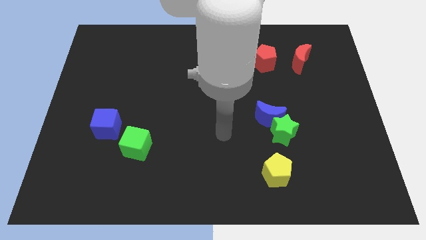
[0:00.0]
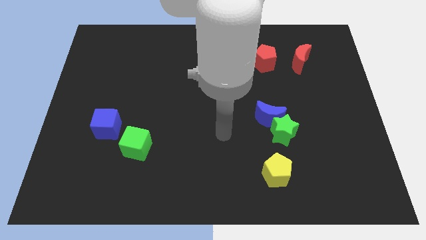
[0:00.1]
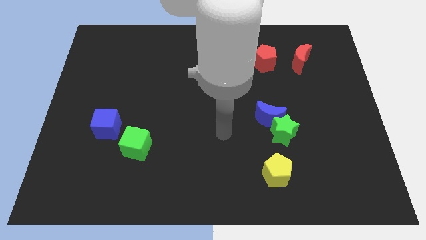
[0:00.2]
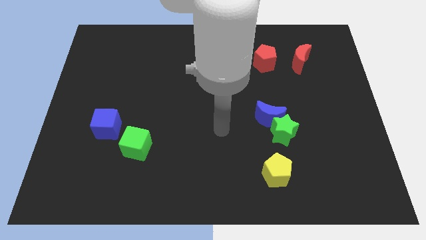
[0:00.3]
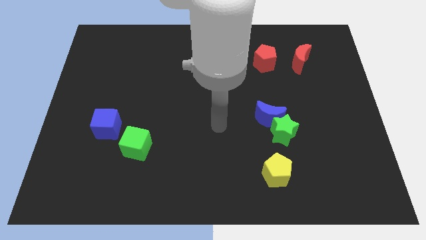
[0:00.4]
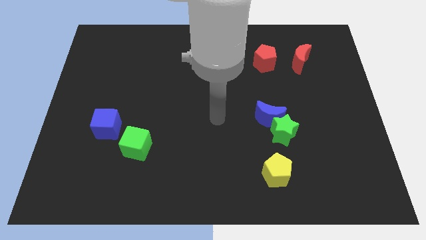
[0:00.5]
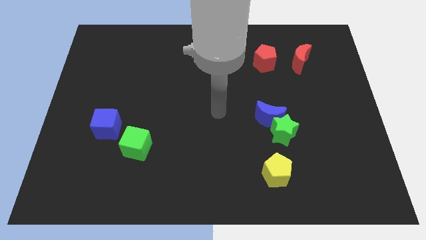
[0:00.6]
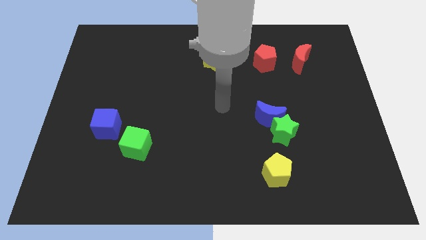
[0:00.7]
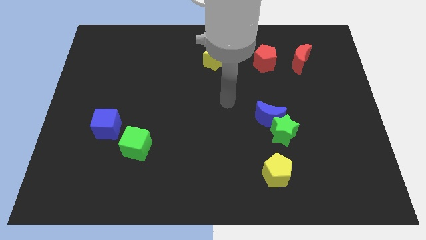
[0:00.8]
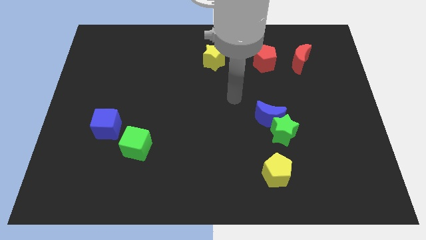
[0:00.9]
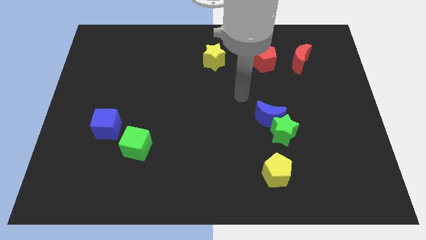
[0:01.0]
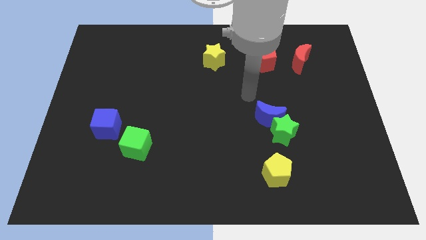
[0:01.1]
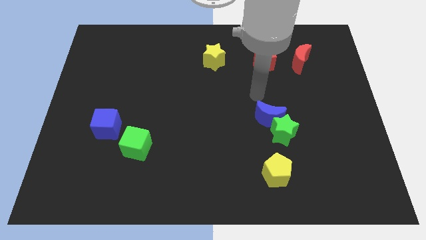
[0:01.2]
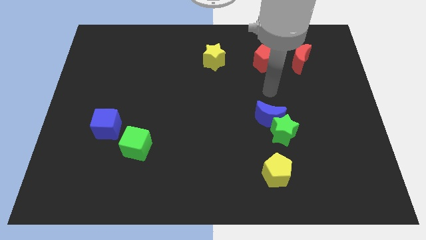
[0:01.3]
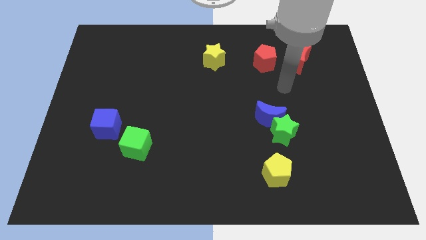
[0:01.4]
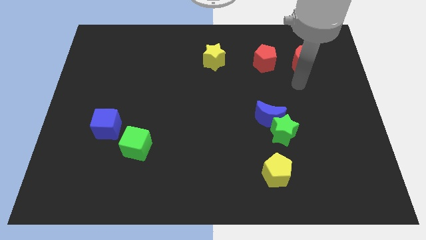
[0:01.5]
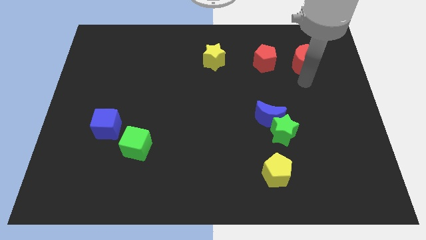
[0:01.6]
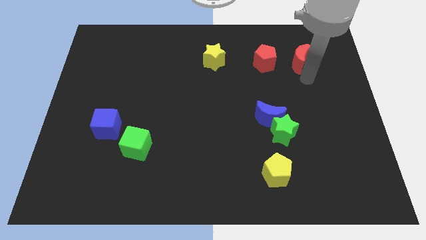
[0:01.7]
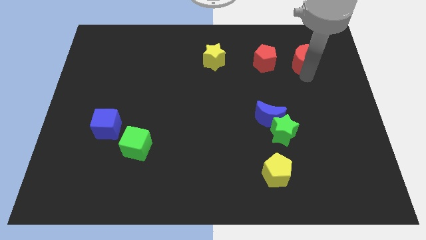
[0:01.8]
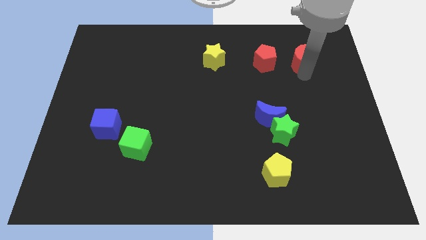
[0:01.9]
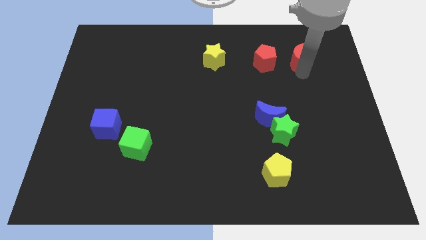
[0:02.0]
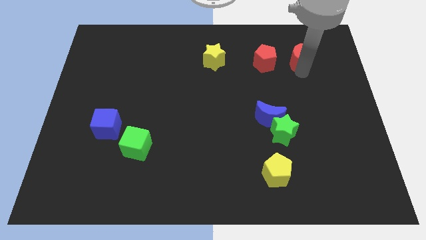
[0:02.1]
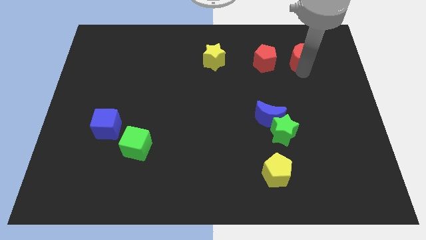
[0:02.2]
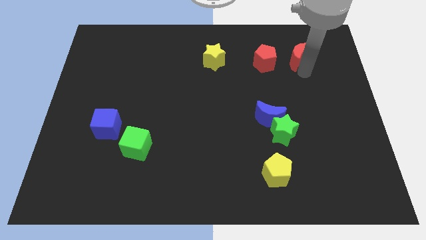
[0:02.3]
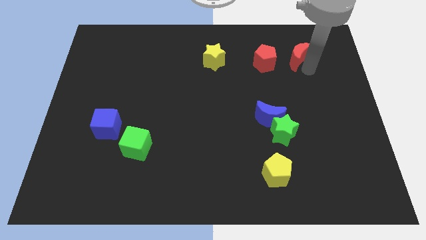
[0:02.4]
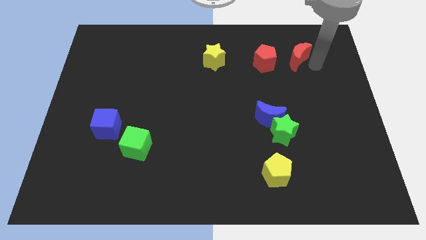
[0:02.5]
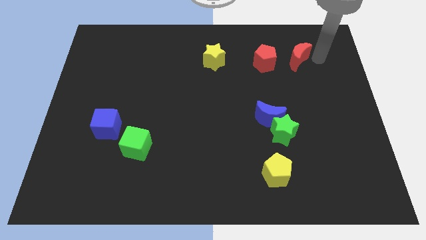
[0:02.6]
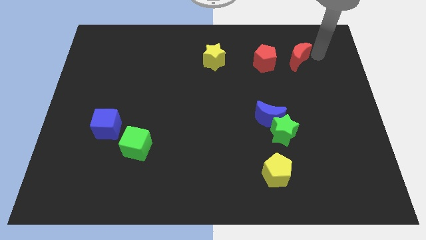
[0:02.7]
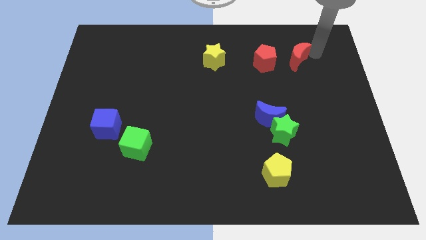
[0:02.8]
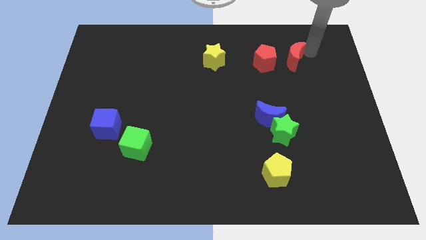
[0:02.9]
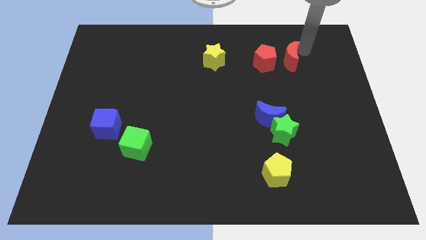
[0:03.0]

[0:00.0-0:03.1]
slightly move the red moon close to the red pentagon

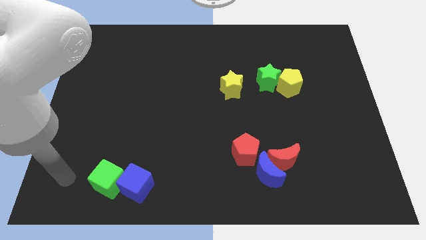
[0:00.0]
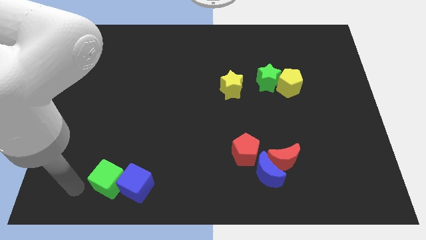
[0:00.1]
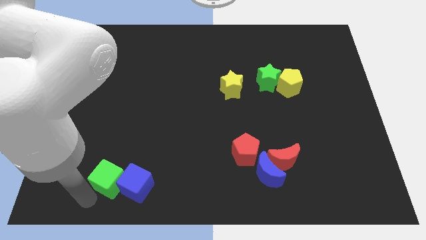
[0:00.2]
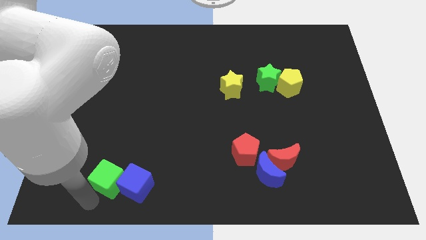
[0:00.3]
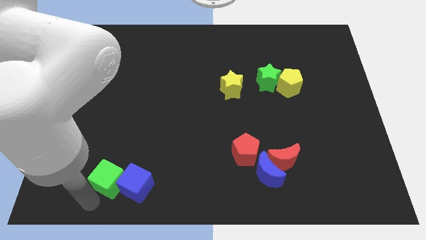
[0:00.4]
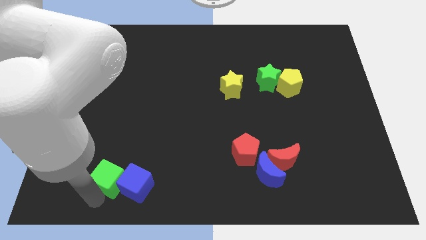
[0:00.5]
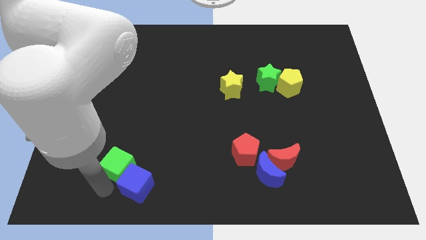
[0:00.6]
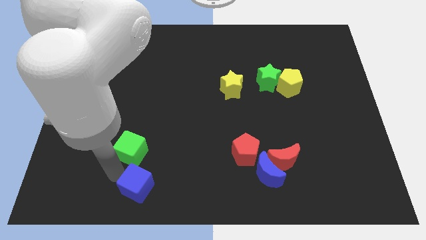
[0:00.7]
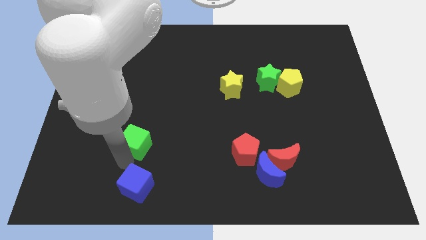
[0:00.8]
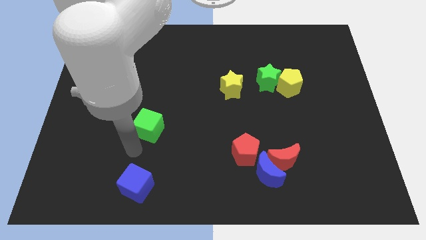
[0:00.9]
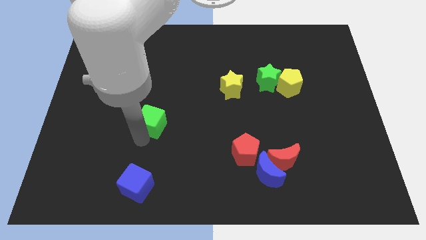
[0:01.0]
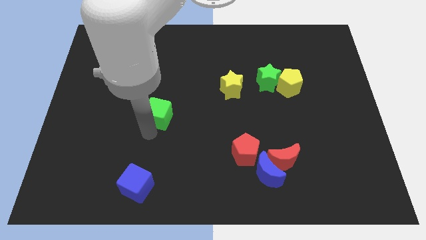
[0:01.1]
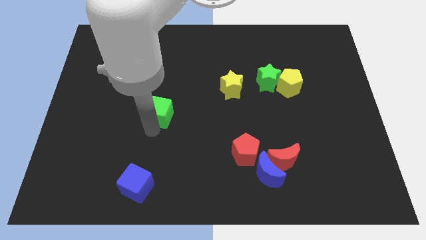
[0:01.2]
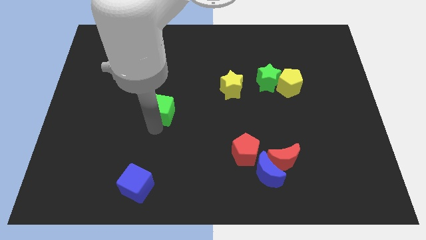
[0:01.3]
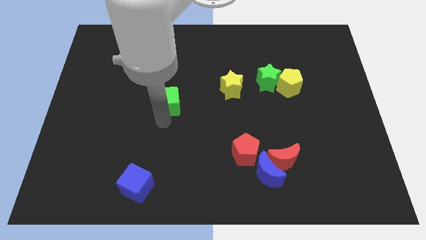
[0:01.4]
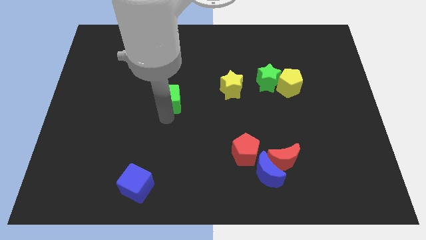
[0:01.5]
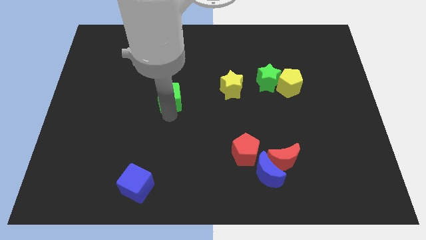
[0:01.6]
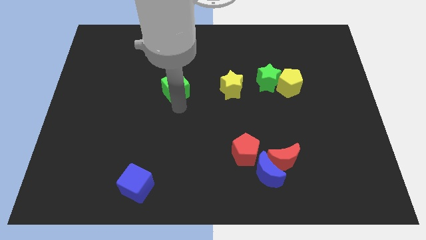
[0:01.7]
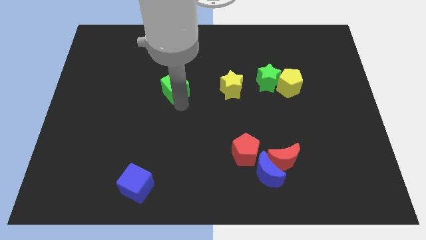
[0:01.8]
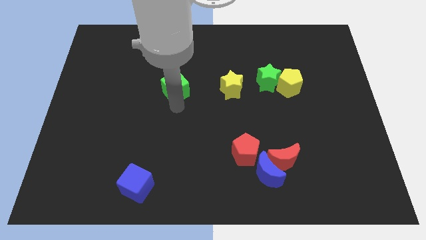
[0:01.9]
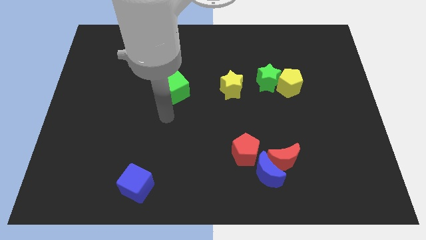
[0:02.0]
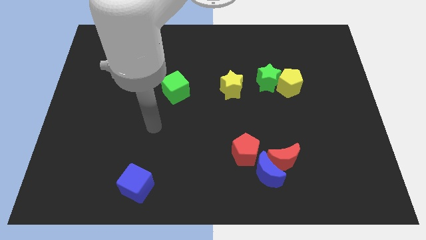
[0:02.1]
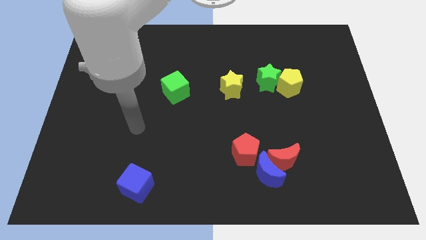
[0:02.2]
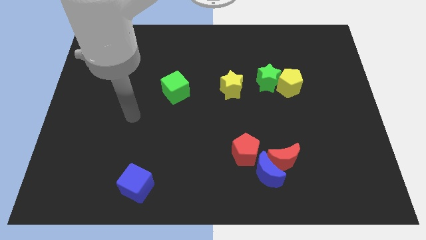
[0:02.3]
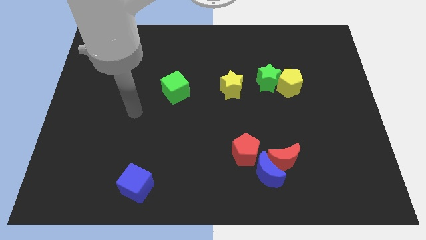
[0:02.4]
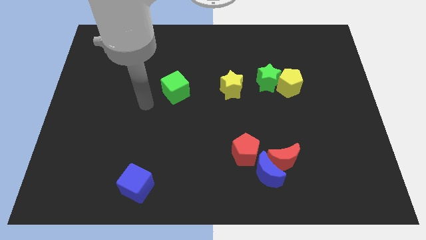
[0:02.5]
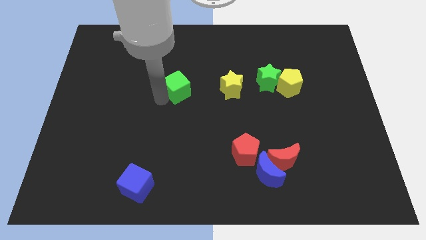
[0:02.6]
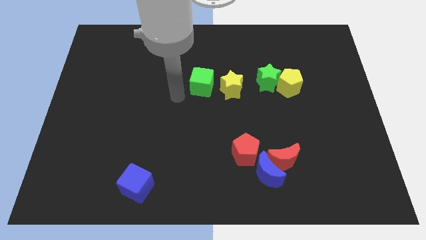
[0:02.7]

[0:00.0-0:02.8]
place the green cube left to the yellow star to form a line

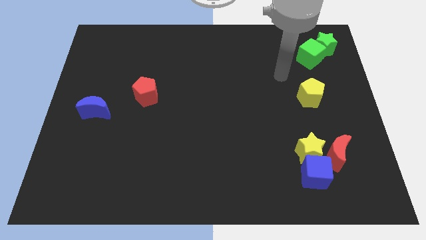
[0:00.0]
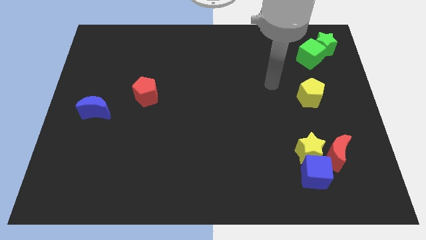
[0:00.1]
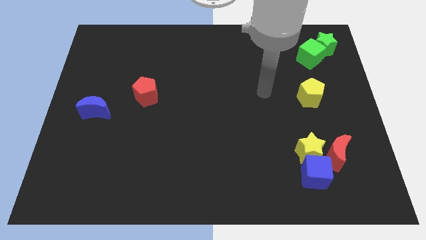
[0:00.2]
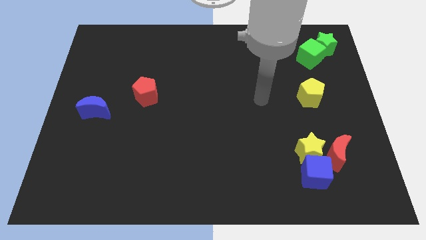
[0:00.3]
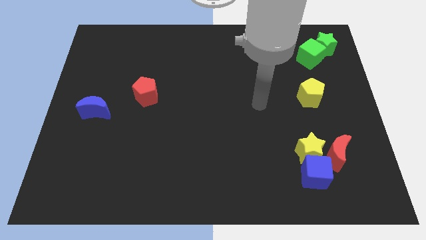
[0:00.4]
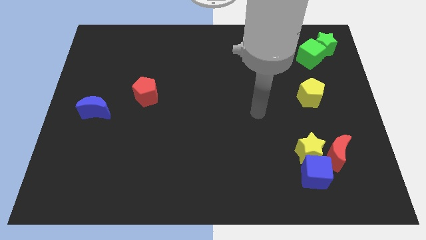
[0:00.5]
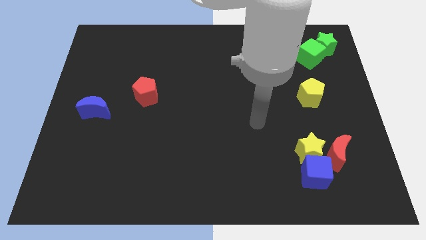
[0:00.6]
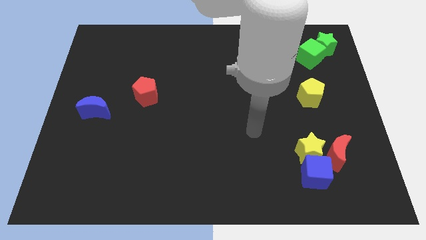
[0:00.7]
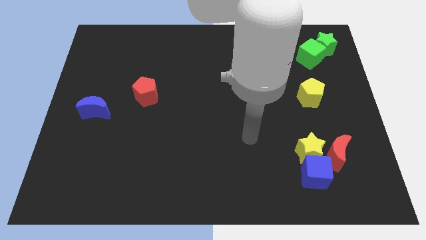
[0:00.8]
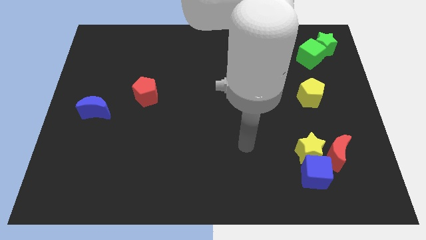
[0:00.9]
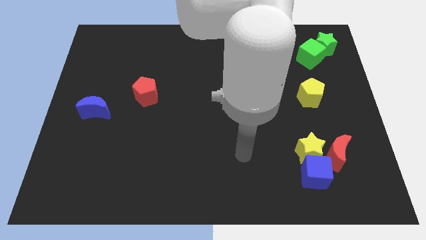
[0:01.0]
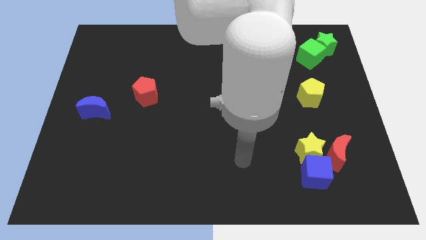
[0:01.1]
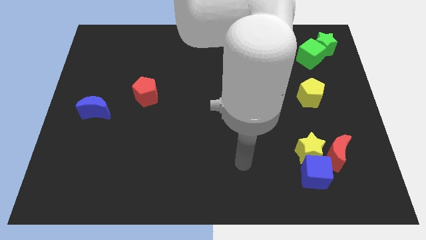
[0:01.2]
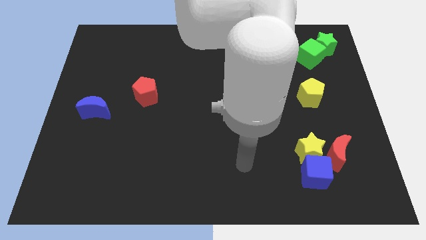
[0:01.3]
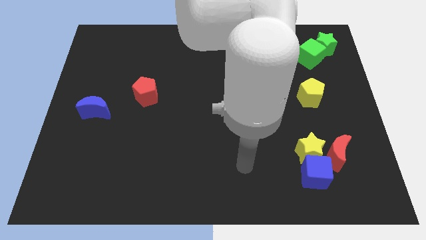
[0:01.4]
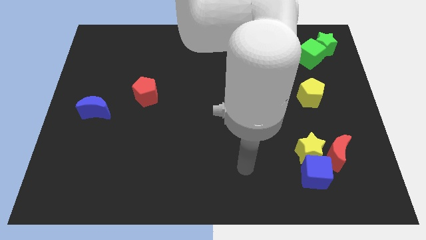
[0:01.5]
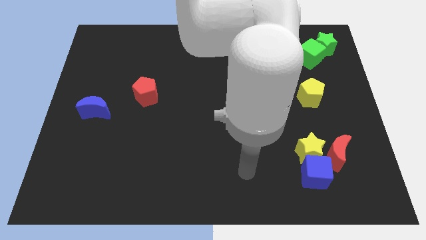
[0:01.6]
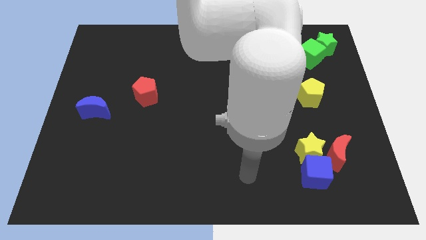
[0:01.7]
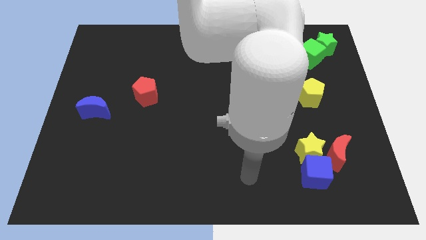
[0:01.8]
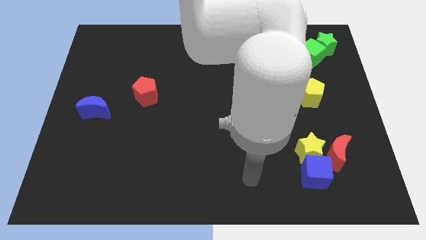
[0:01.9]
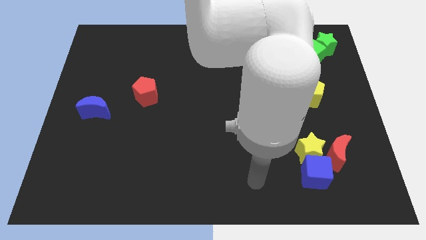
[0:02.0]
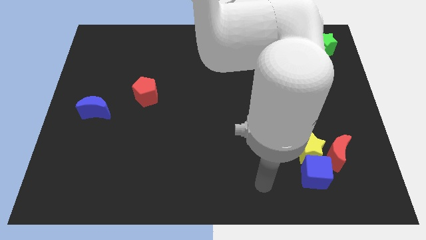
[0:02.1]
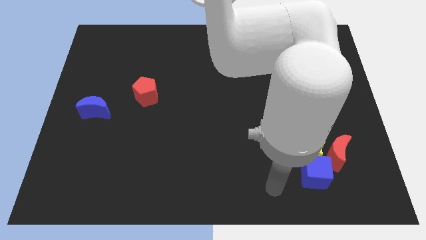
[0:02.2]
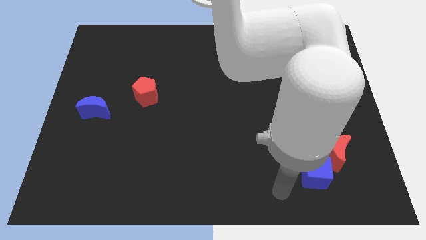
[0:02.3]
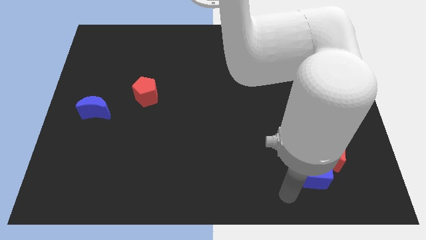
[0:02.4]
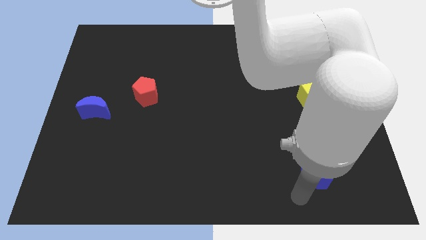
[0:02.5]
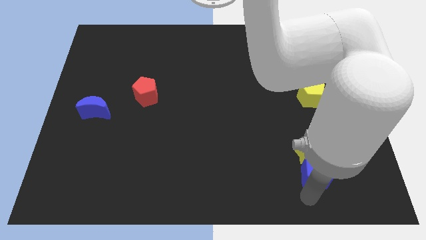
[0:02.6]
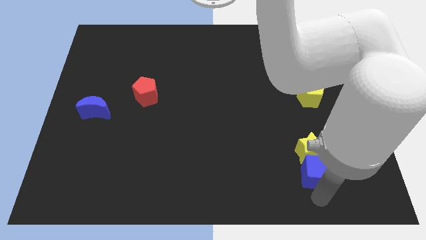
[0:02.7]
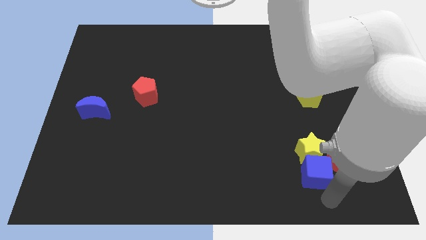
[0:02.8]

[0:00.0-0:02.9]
move your arm towards the blue cube

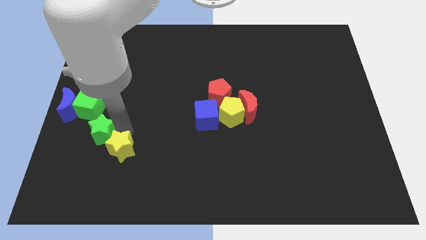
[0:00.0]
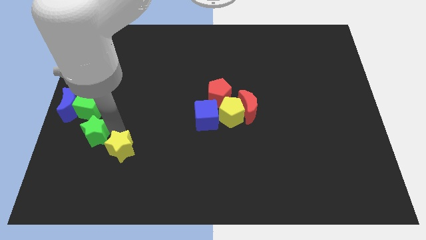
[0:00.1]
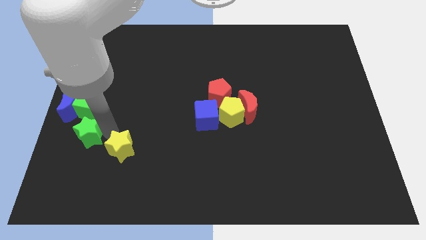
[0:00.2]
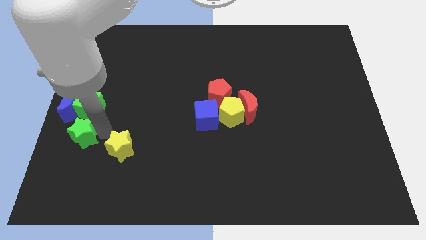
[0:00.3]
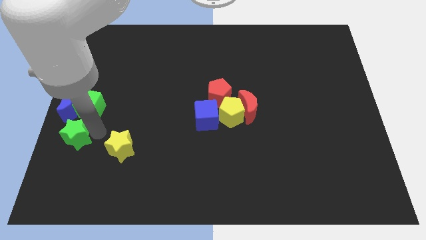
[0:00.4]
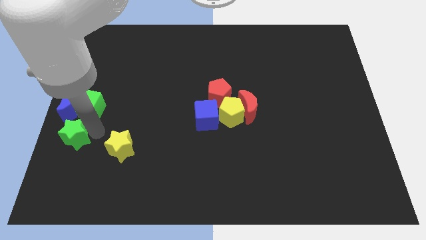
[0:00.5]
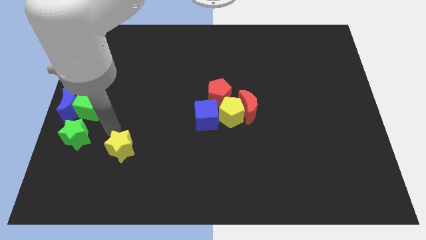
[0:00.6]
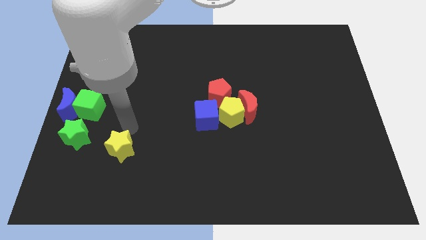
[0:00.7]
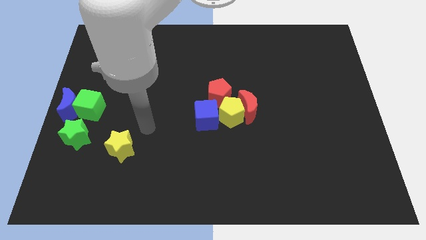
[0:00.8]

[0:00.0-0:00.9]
place the green star below the green cube
